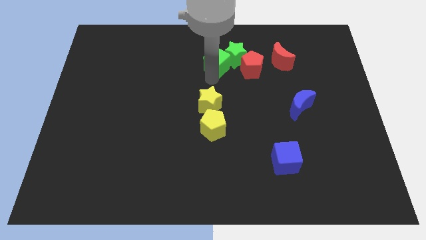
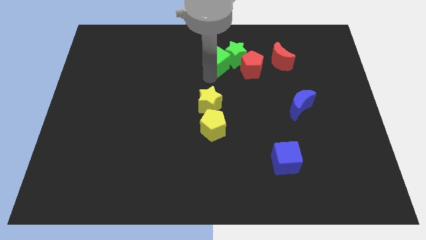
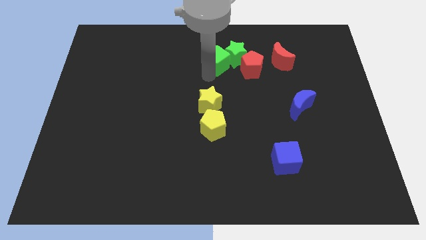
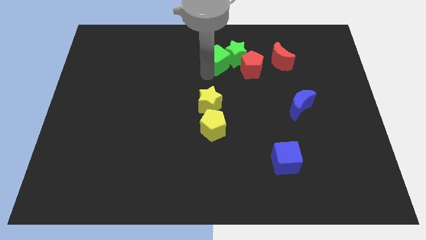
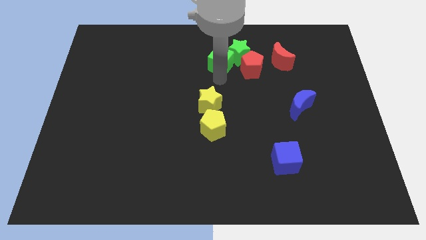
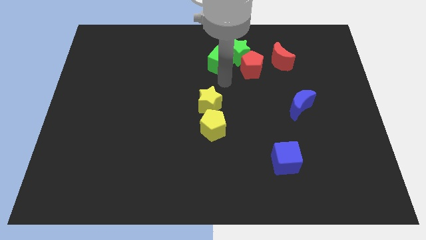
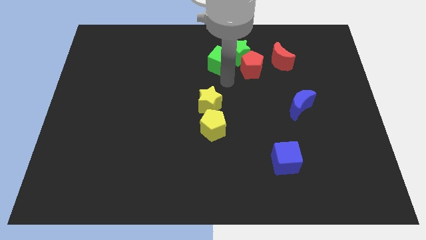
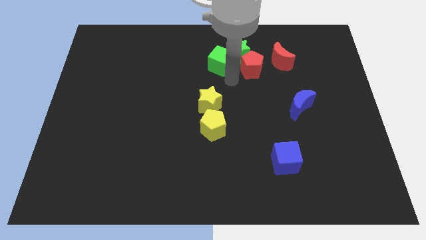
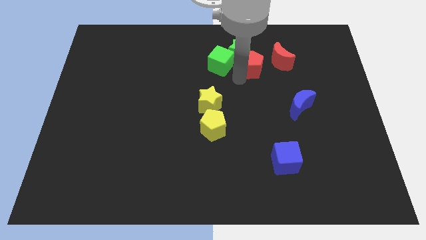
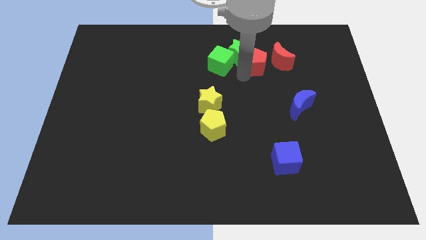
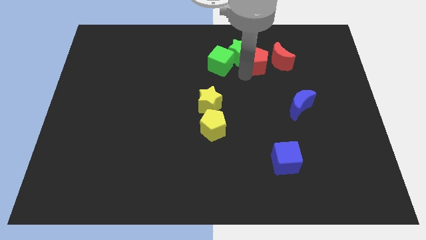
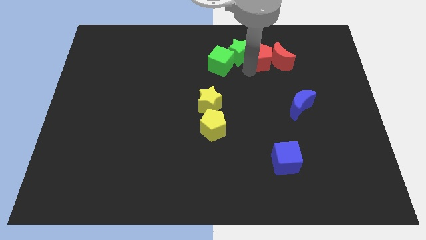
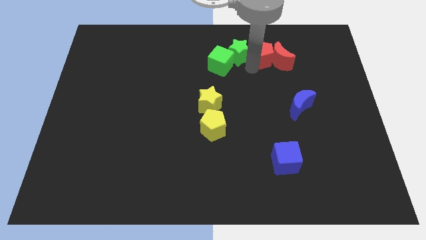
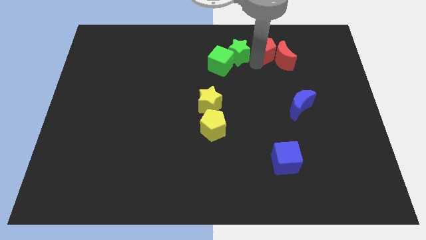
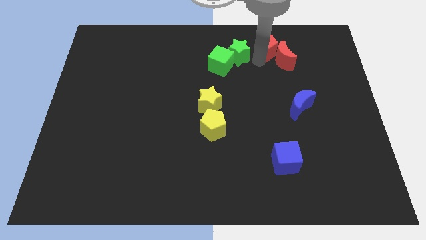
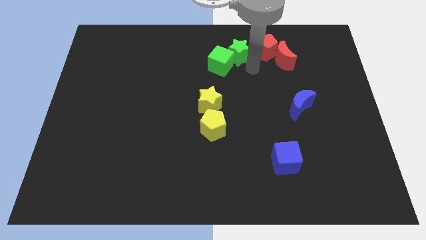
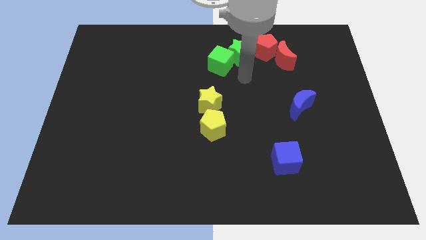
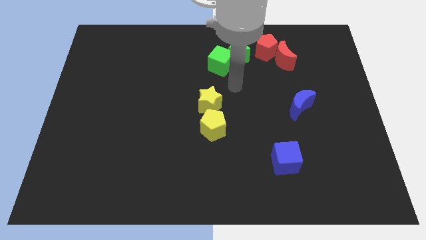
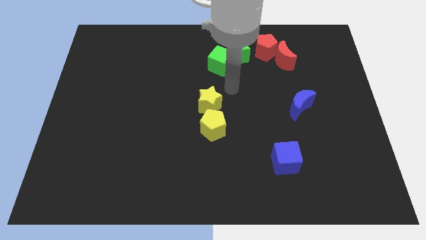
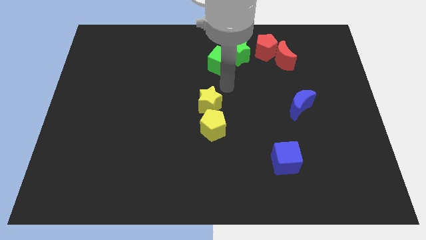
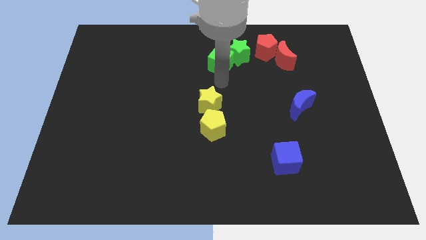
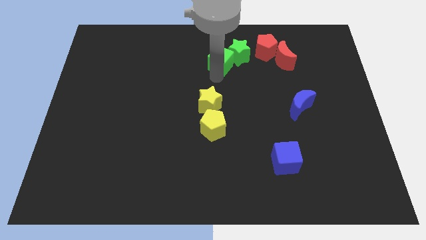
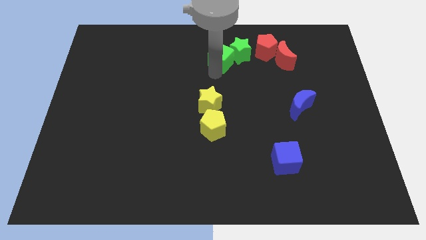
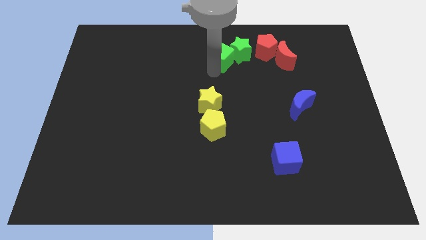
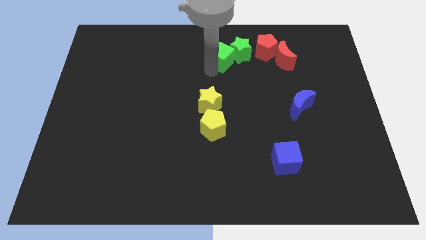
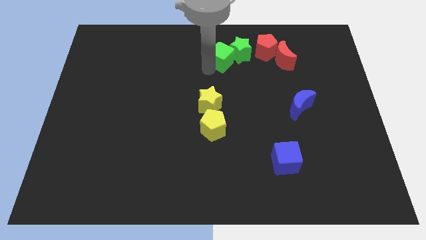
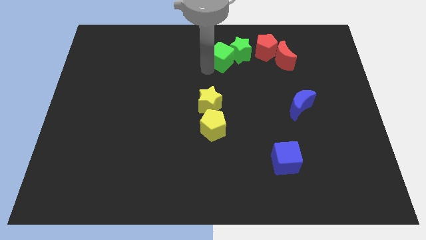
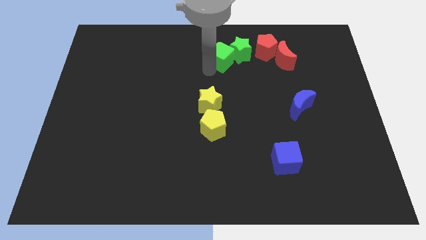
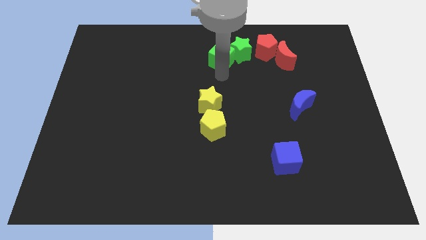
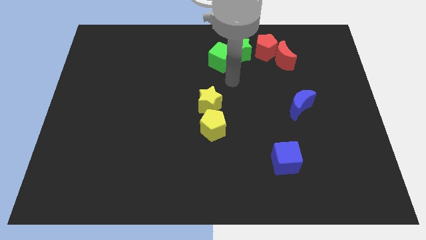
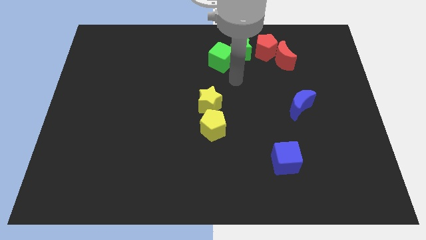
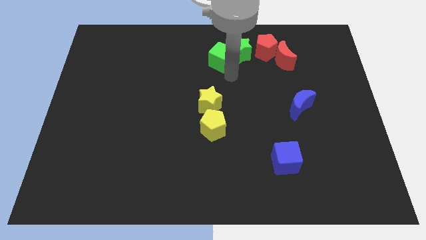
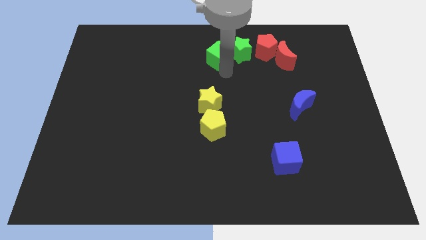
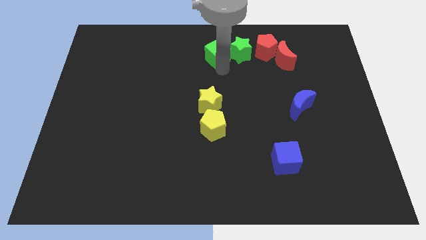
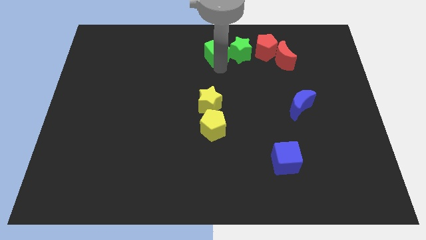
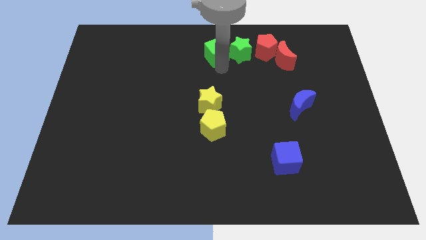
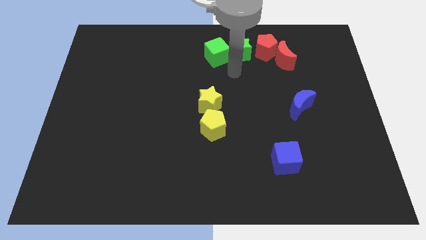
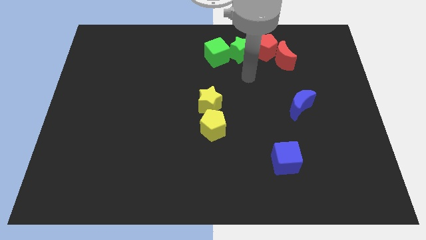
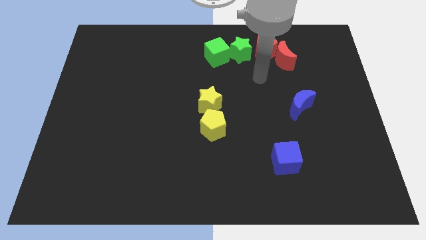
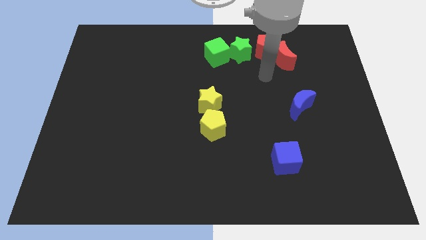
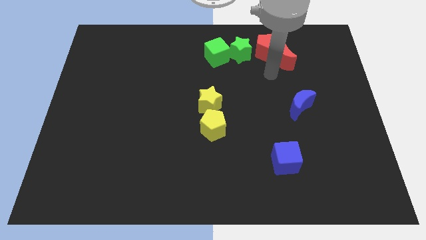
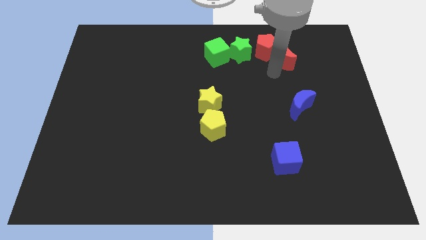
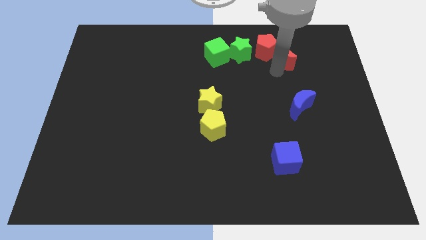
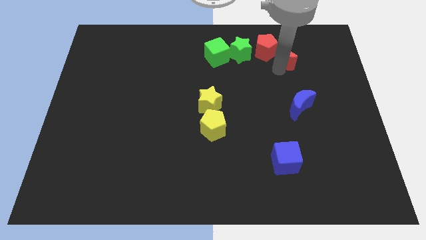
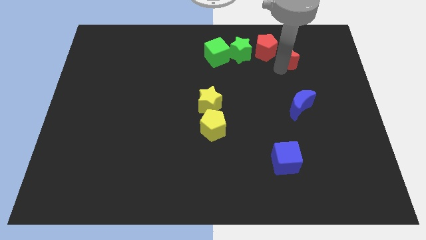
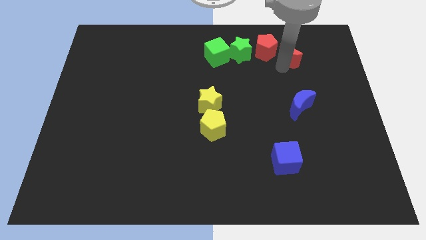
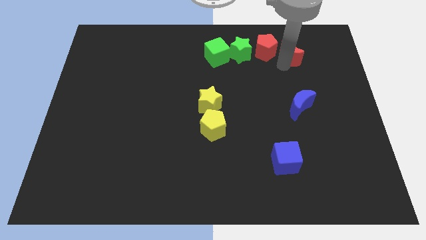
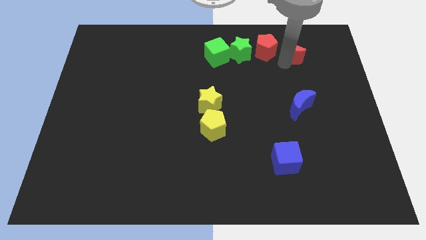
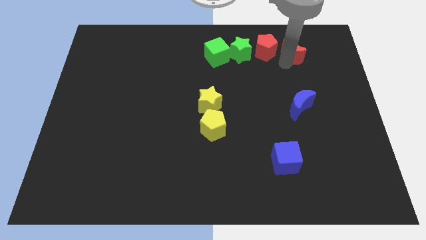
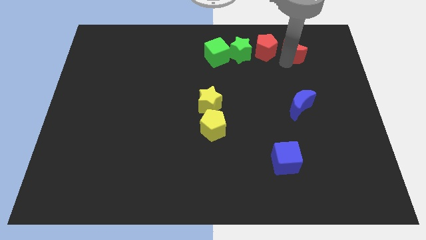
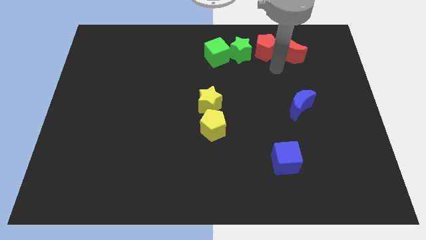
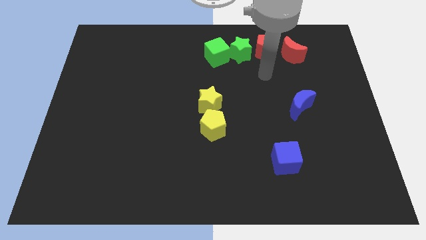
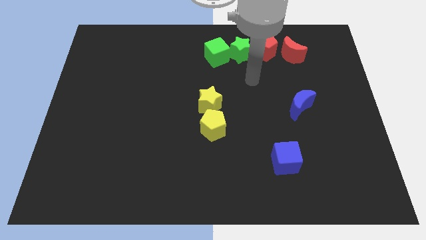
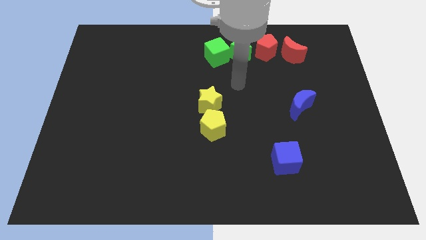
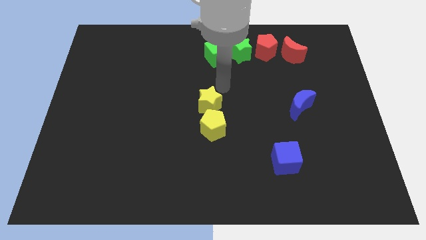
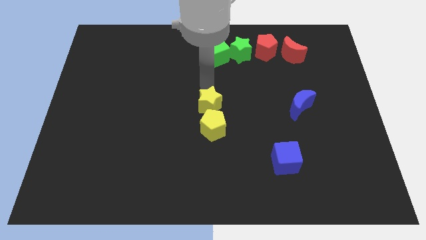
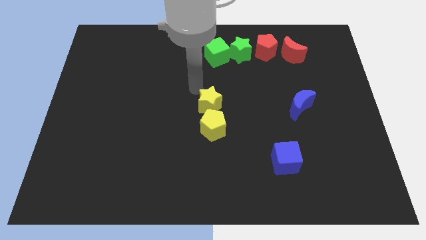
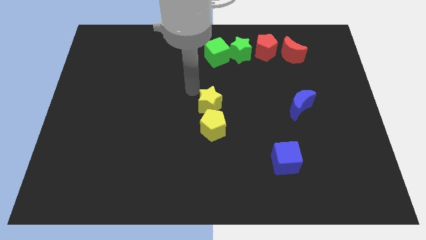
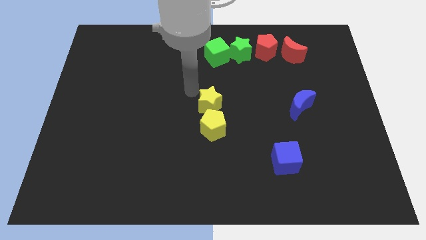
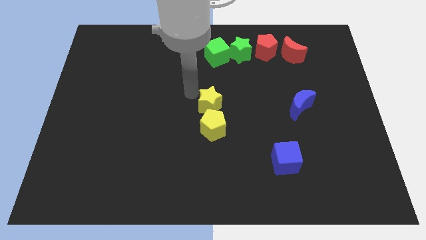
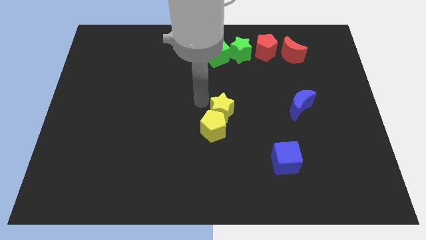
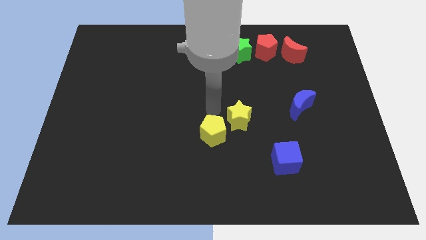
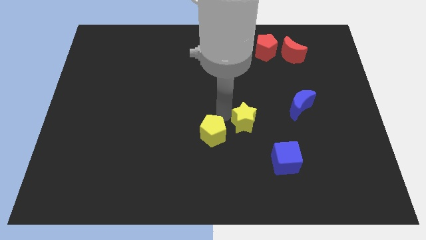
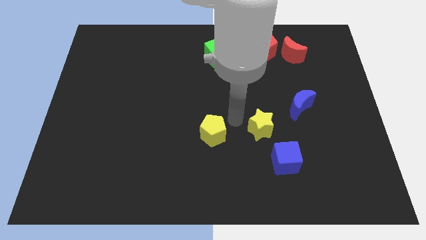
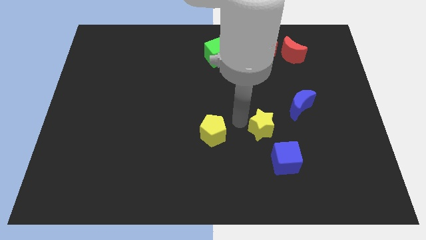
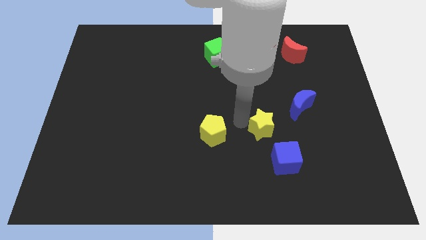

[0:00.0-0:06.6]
move the green and red blocks in a row

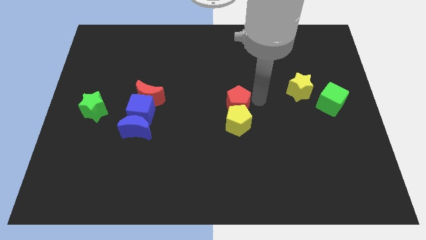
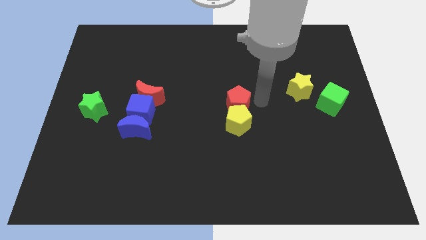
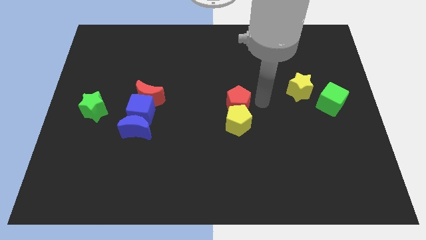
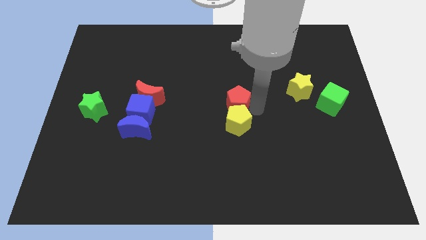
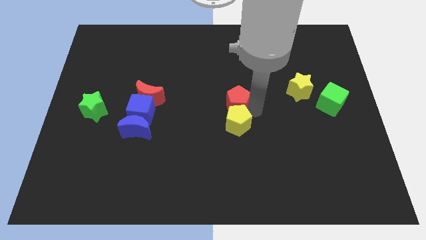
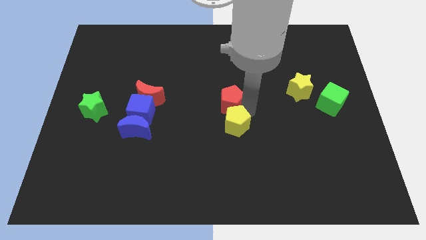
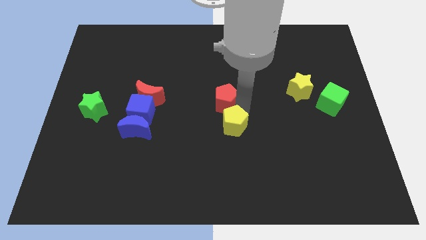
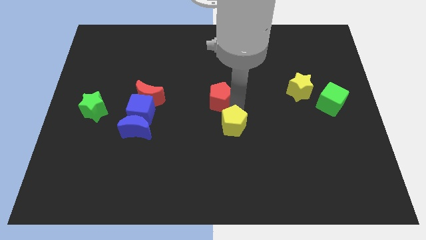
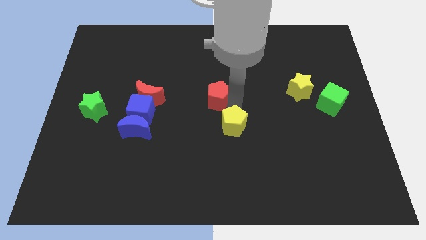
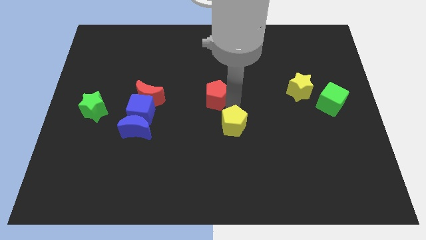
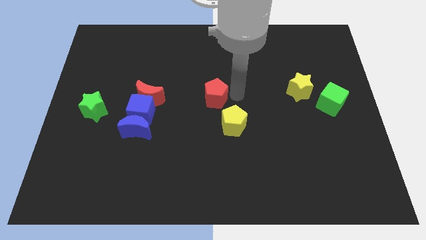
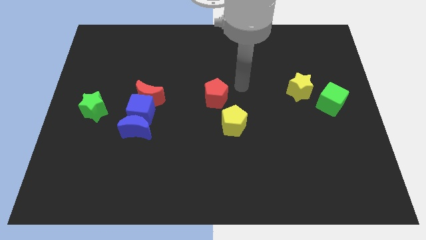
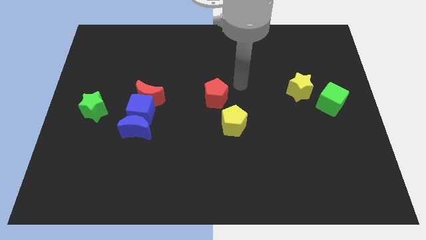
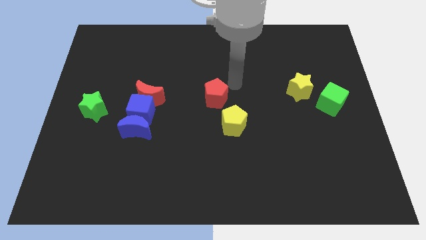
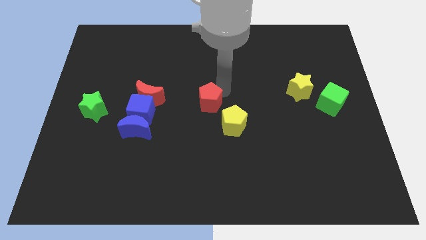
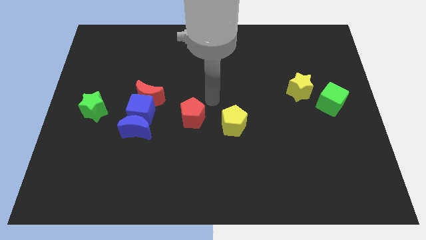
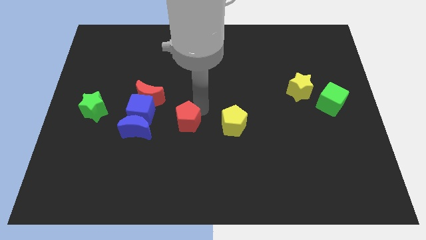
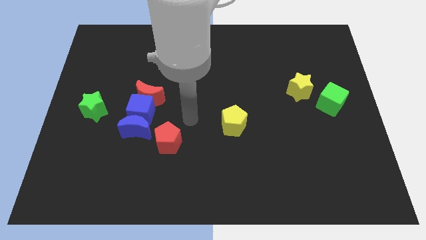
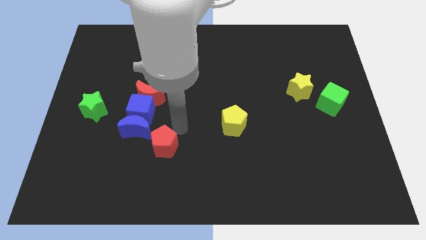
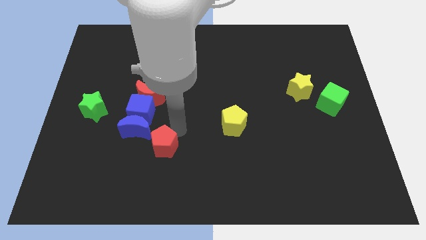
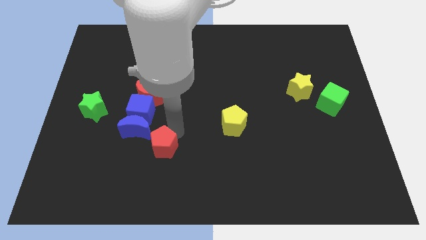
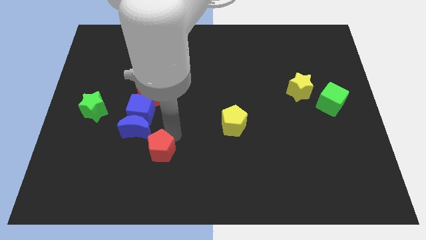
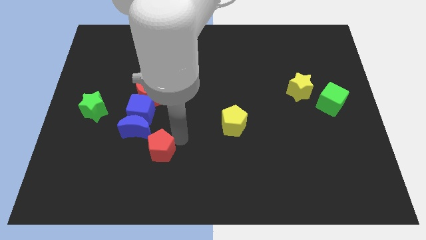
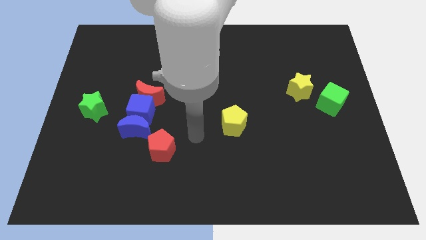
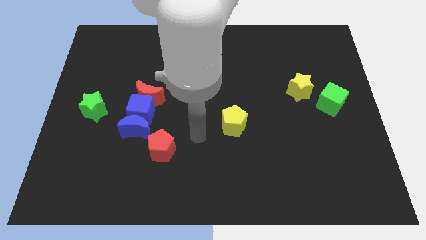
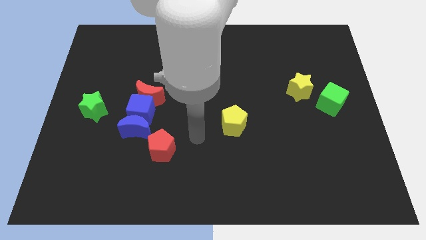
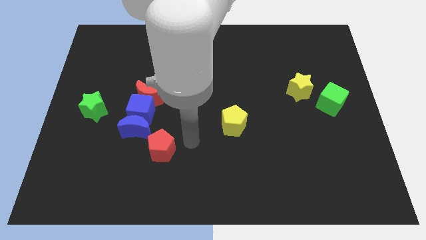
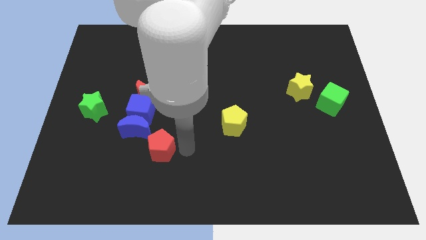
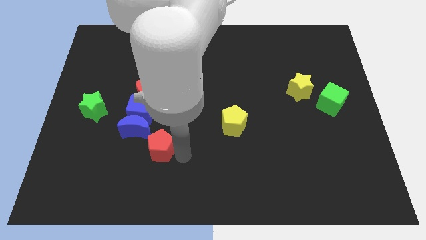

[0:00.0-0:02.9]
place the red pentagon towards the bottom right of the blue crescent
